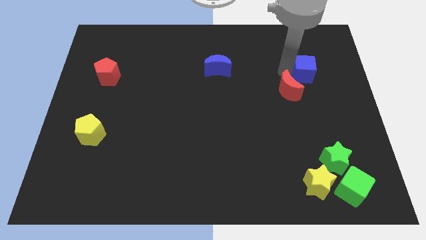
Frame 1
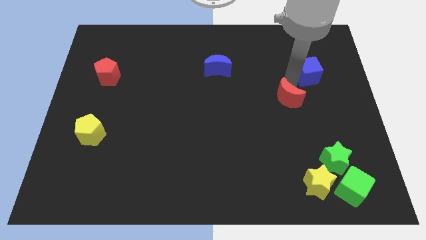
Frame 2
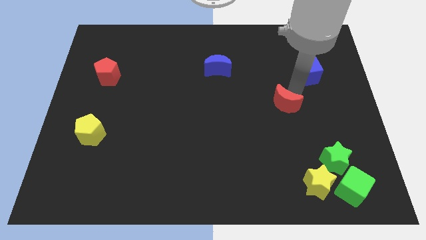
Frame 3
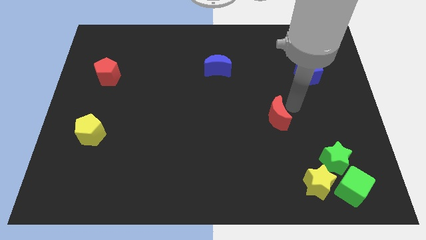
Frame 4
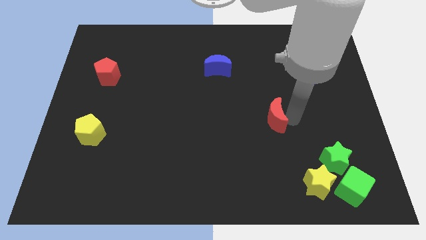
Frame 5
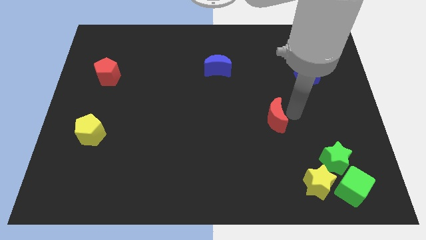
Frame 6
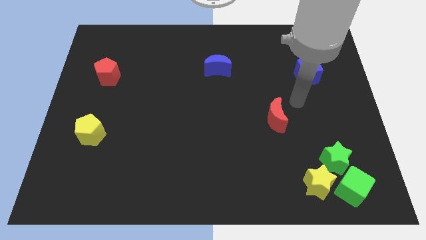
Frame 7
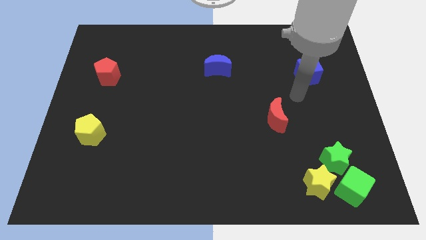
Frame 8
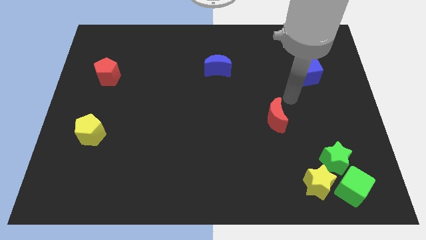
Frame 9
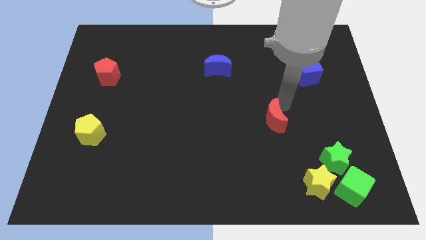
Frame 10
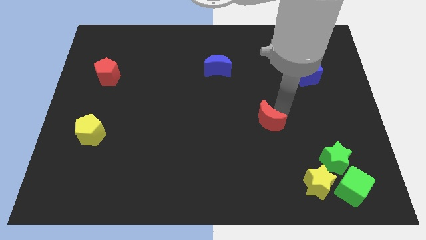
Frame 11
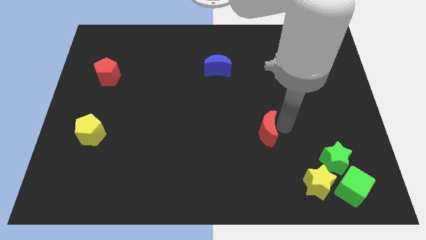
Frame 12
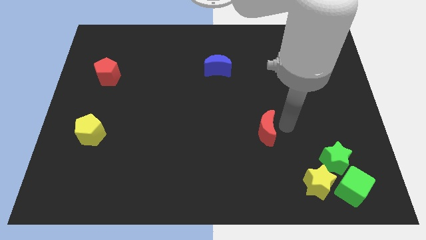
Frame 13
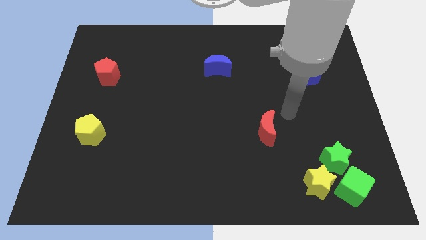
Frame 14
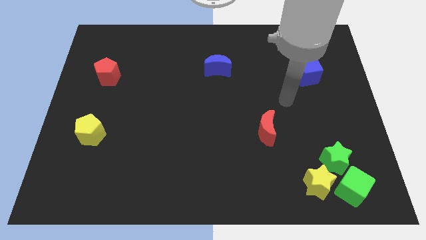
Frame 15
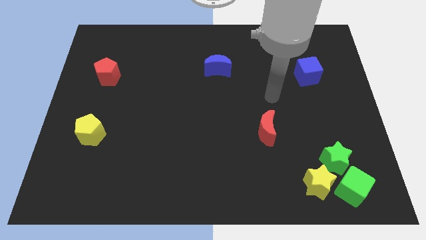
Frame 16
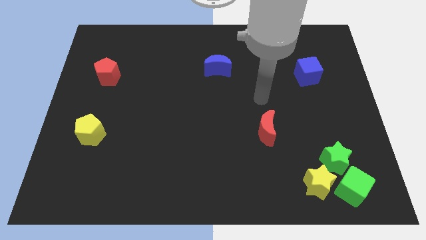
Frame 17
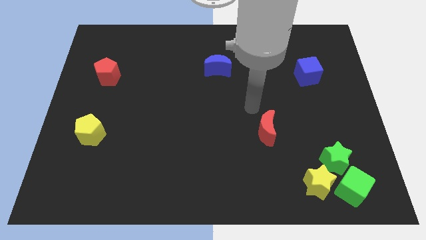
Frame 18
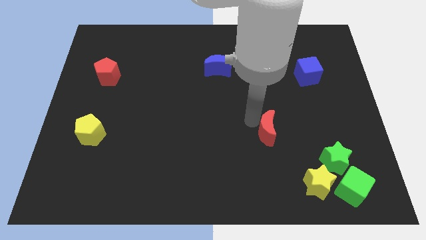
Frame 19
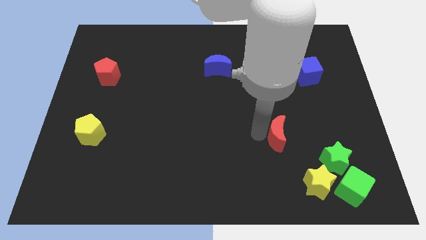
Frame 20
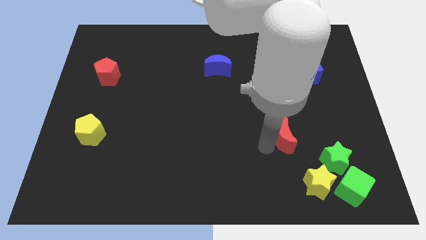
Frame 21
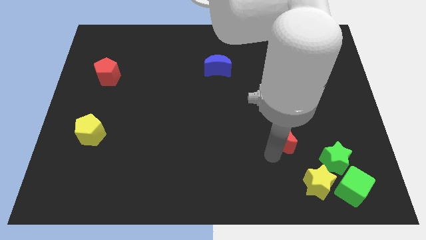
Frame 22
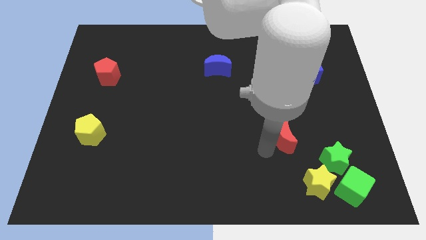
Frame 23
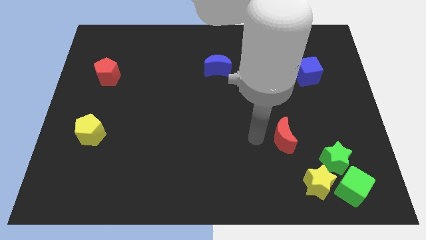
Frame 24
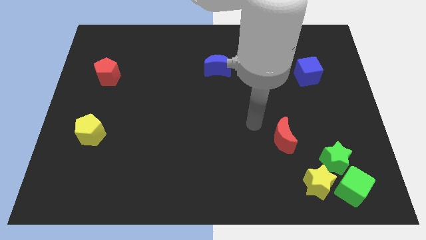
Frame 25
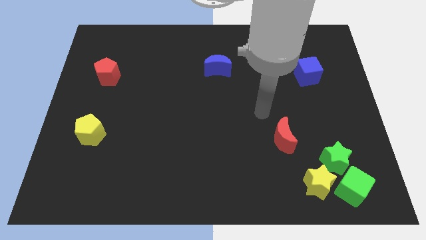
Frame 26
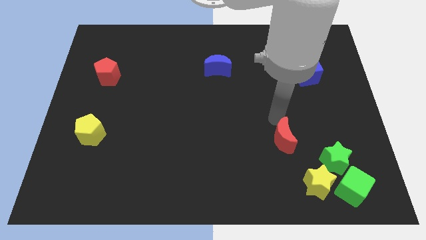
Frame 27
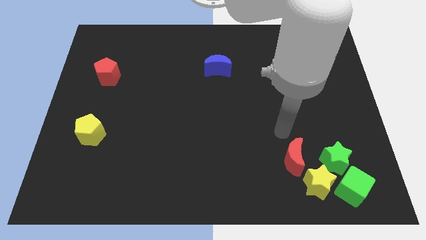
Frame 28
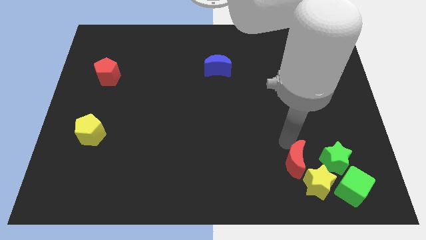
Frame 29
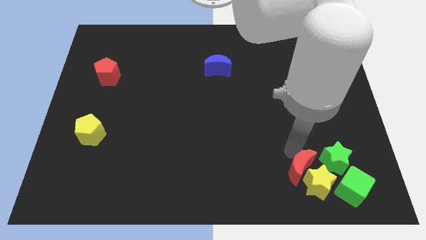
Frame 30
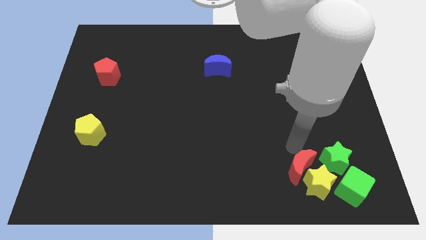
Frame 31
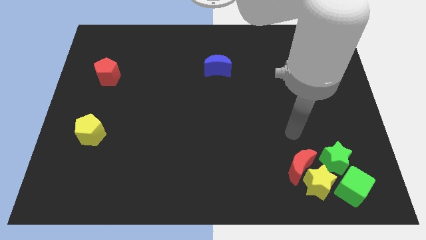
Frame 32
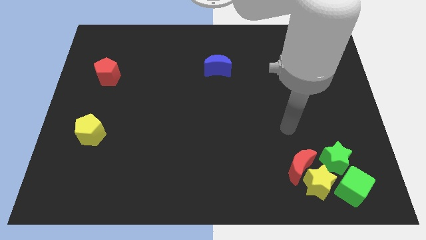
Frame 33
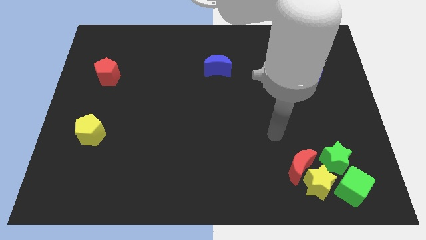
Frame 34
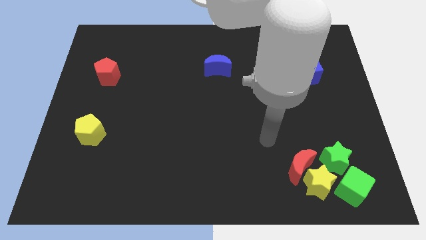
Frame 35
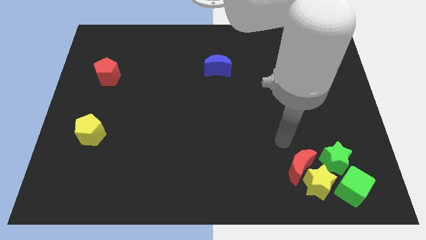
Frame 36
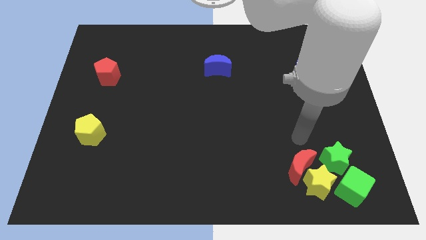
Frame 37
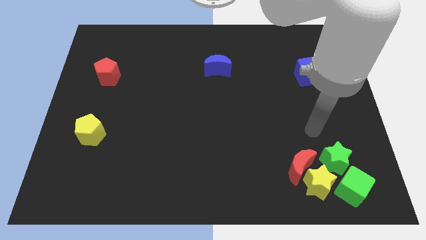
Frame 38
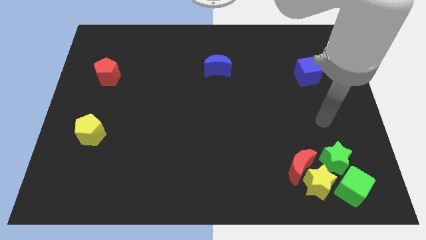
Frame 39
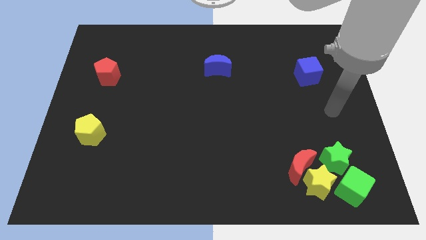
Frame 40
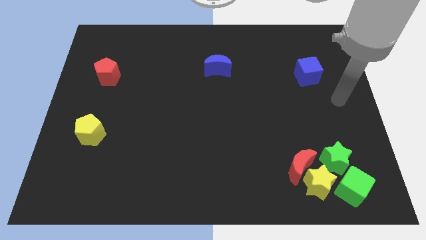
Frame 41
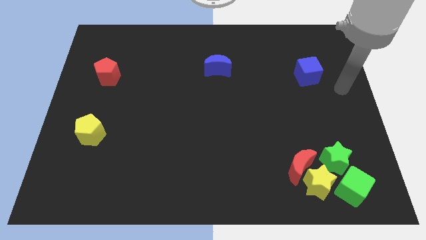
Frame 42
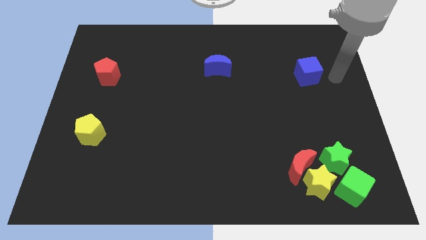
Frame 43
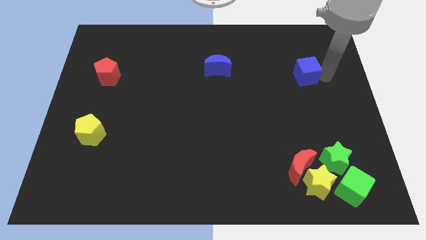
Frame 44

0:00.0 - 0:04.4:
place the red crescent top left to the yellow star

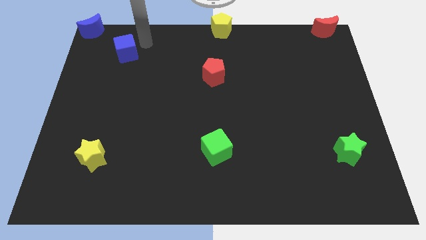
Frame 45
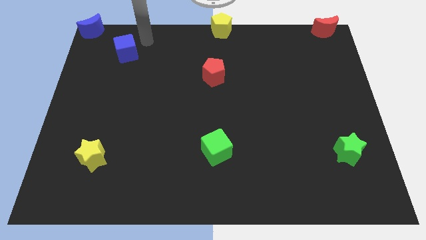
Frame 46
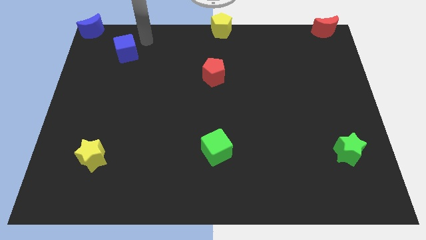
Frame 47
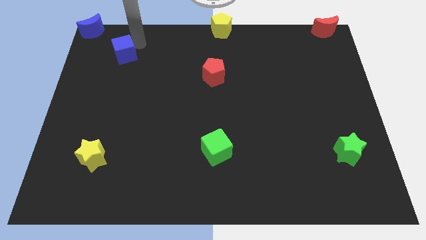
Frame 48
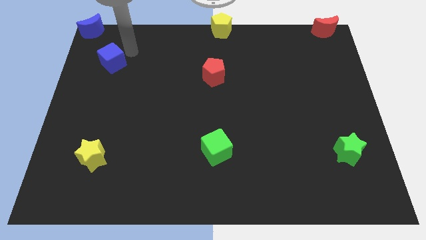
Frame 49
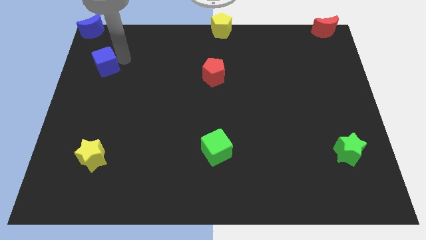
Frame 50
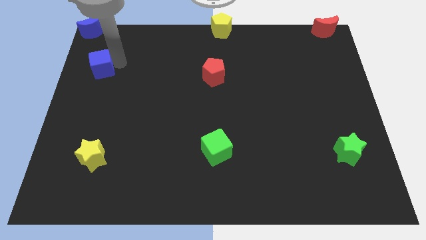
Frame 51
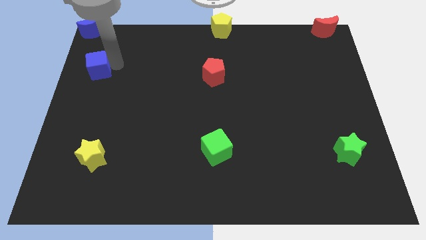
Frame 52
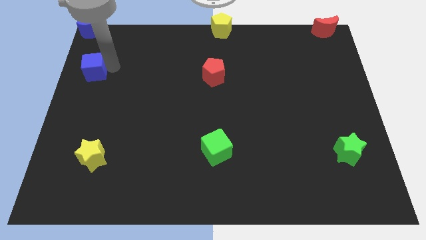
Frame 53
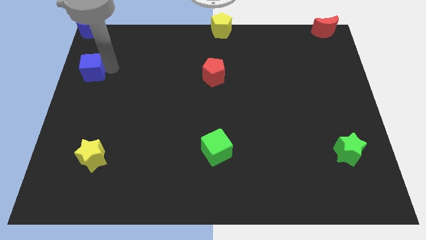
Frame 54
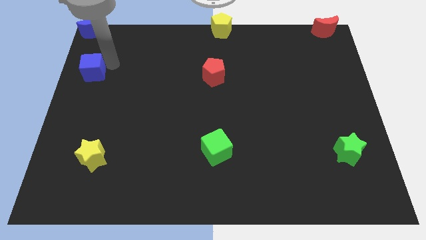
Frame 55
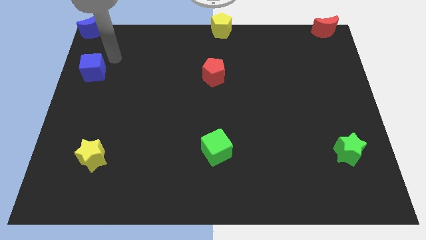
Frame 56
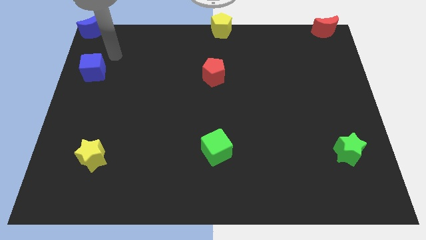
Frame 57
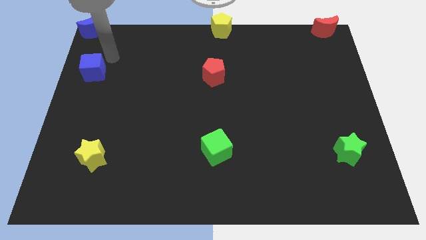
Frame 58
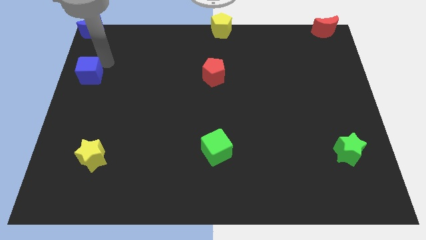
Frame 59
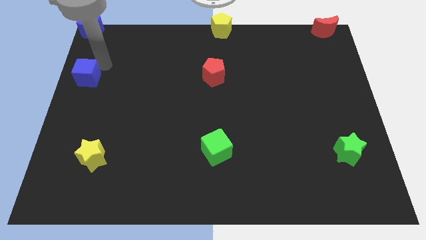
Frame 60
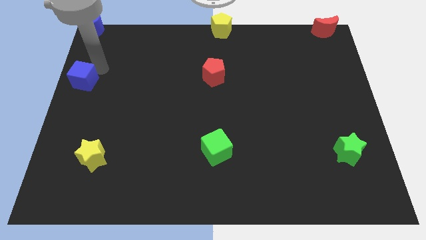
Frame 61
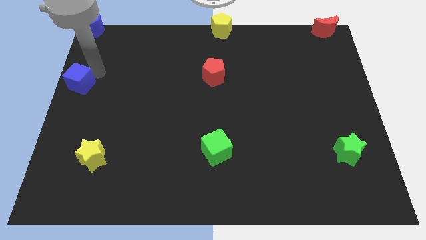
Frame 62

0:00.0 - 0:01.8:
put the blue cube vertically below the blue moon
